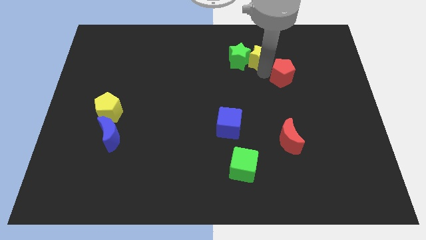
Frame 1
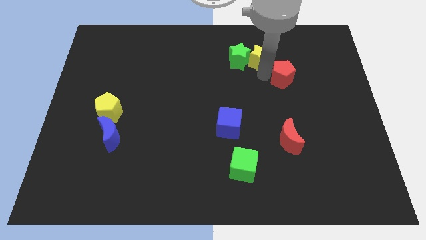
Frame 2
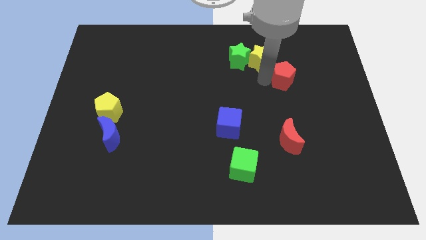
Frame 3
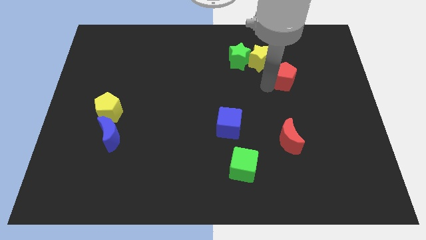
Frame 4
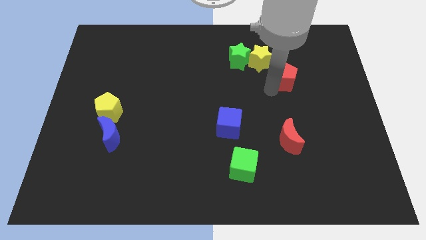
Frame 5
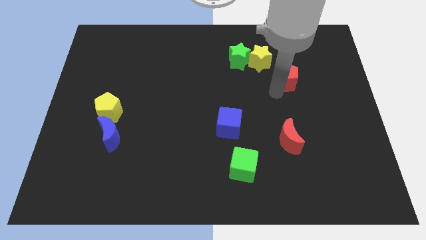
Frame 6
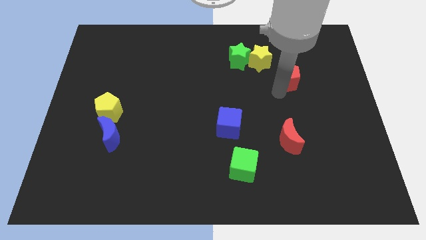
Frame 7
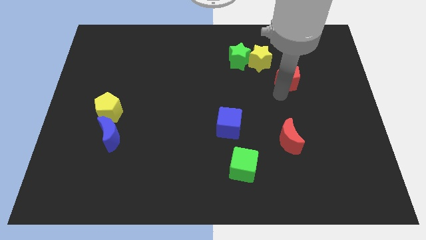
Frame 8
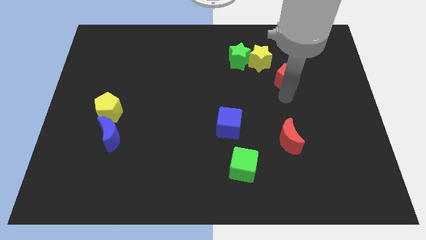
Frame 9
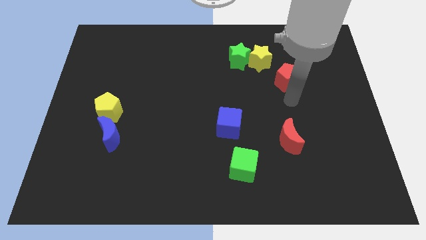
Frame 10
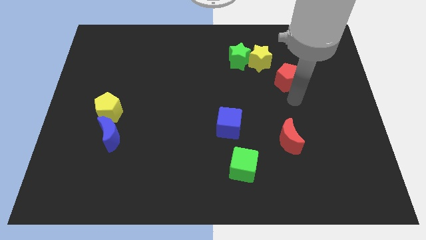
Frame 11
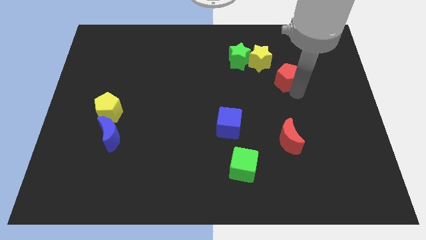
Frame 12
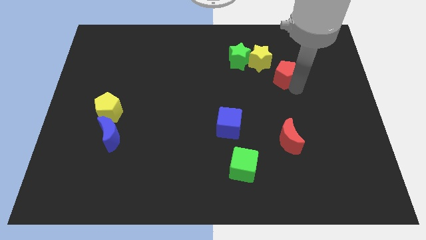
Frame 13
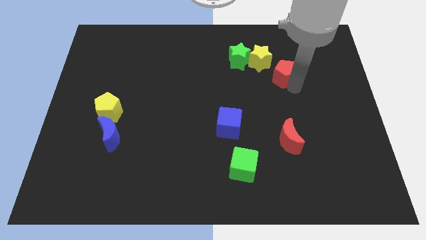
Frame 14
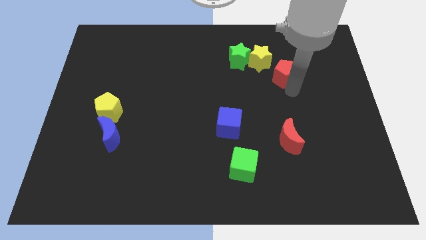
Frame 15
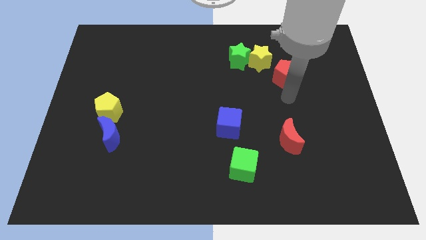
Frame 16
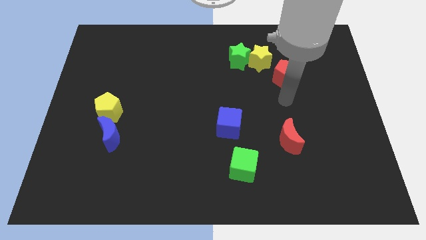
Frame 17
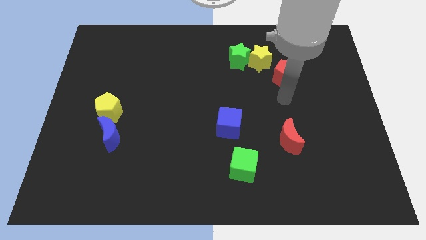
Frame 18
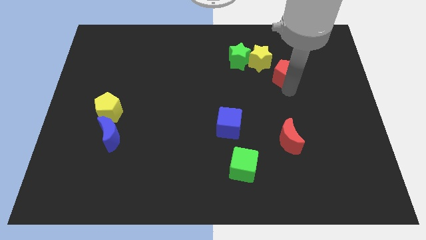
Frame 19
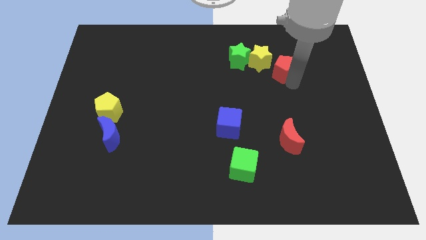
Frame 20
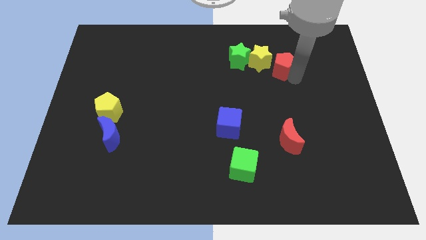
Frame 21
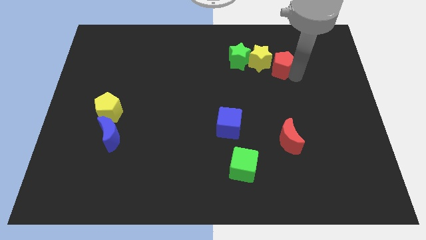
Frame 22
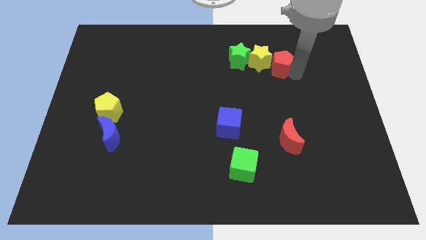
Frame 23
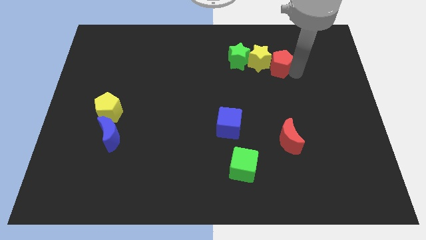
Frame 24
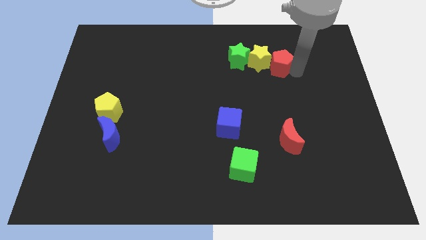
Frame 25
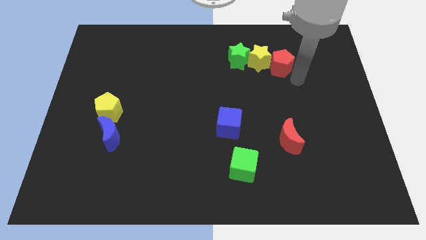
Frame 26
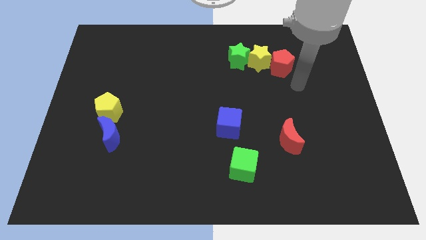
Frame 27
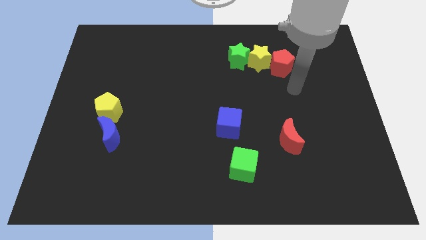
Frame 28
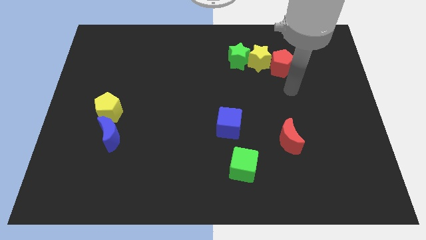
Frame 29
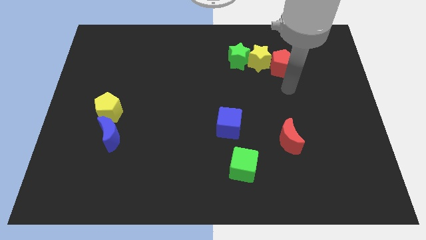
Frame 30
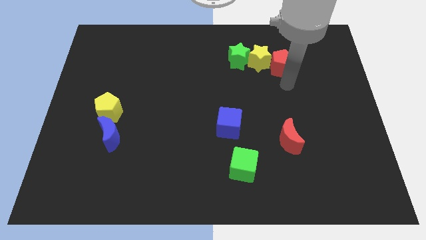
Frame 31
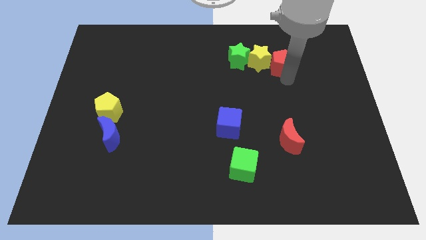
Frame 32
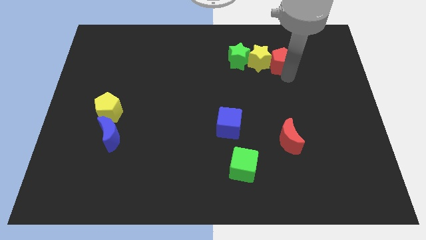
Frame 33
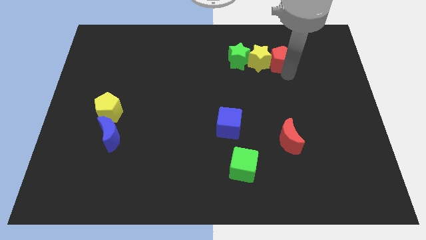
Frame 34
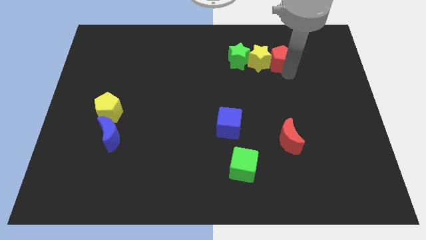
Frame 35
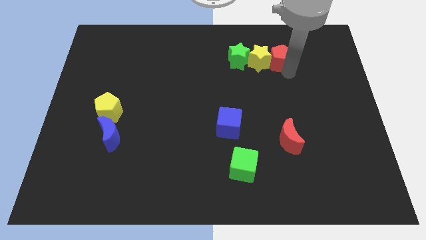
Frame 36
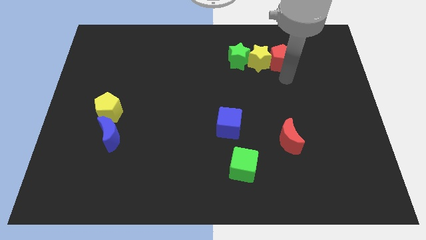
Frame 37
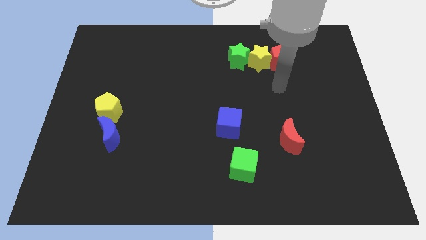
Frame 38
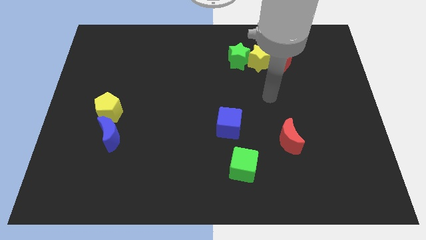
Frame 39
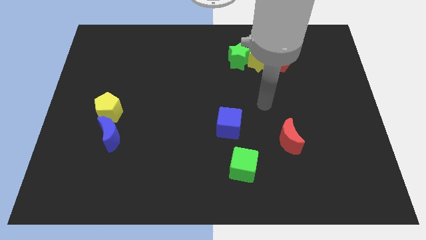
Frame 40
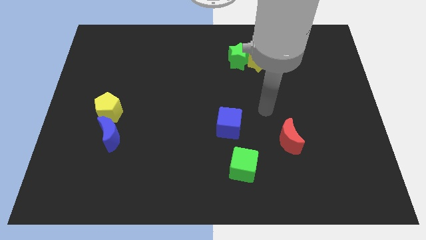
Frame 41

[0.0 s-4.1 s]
move the red pentagon right to the yellow star

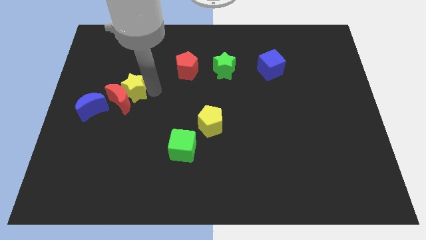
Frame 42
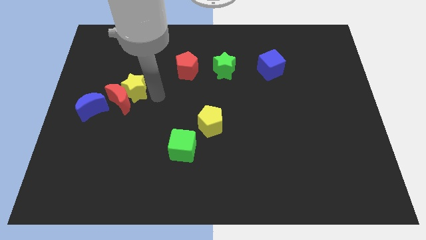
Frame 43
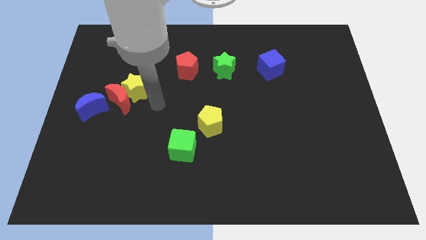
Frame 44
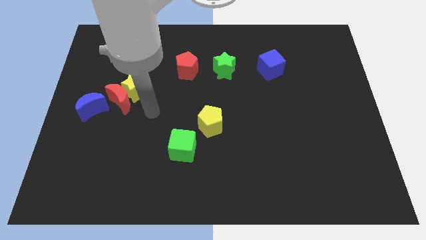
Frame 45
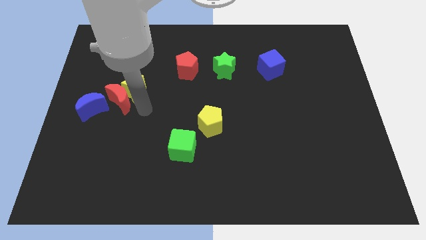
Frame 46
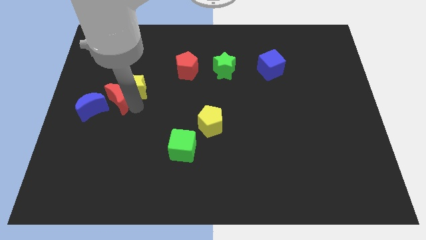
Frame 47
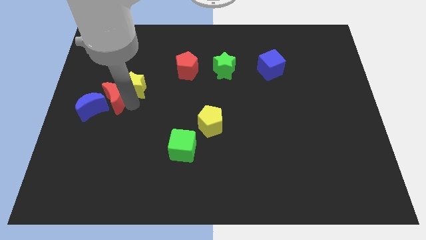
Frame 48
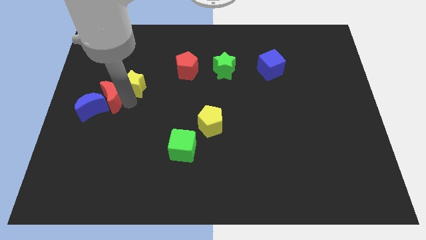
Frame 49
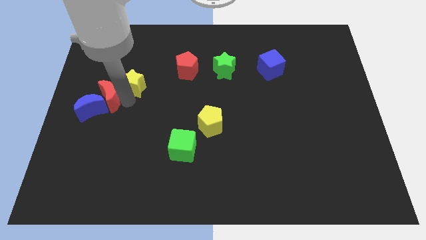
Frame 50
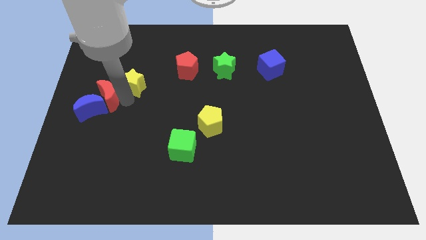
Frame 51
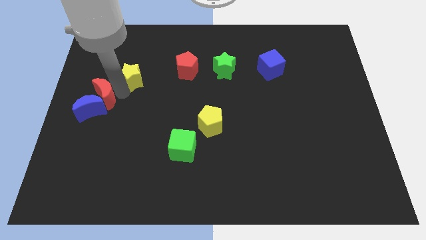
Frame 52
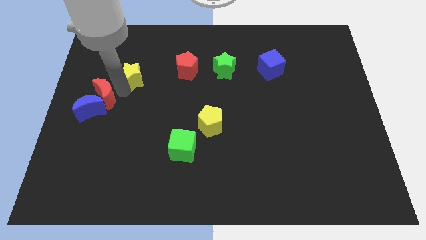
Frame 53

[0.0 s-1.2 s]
move arm between yellow star and red moon

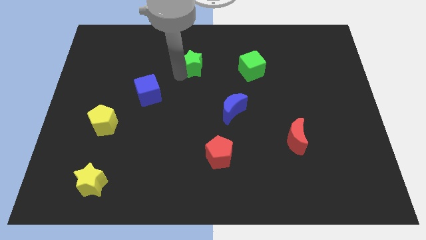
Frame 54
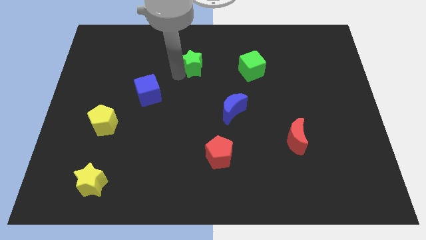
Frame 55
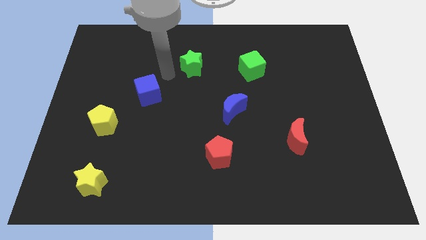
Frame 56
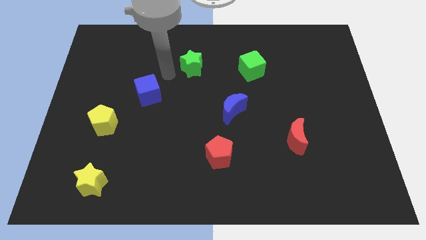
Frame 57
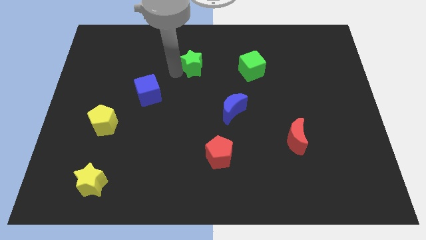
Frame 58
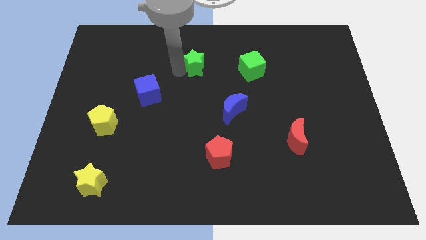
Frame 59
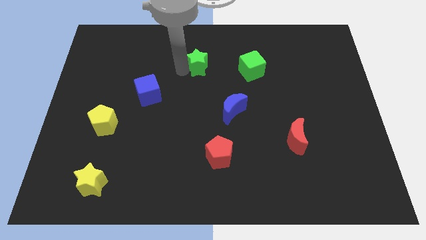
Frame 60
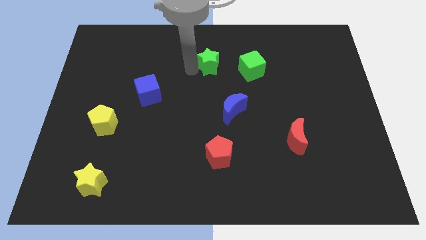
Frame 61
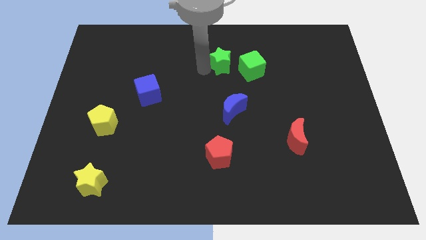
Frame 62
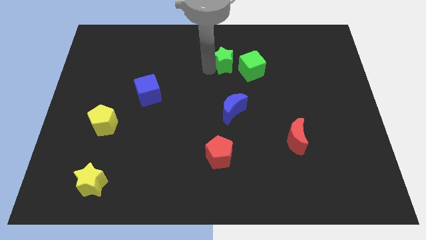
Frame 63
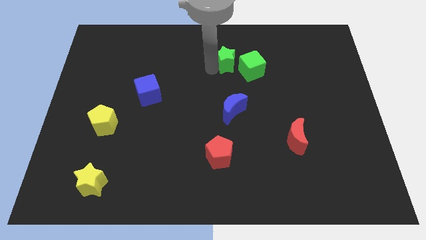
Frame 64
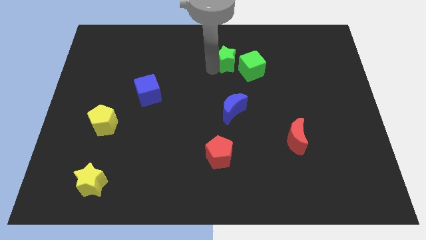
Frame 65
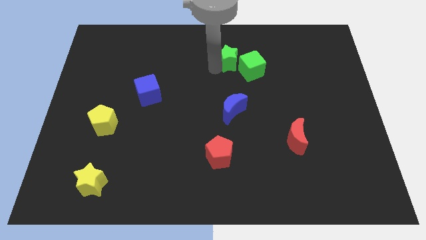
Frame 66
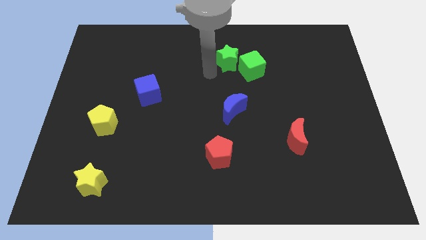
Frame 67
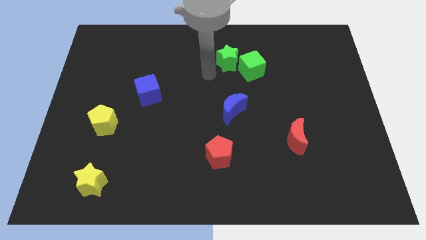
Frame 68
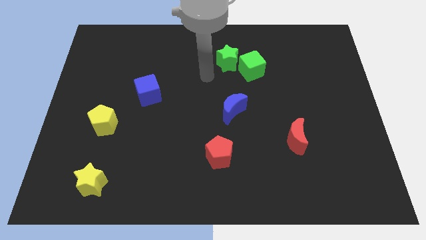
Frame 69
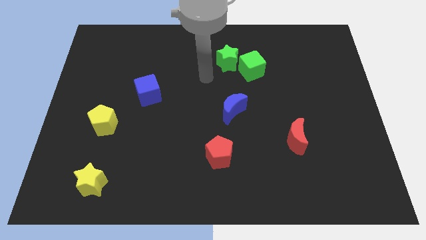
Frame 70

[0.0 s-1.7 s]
place the green star diagonally top left to the green cube

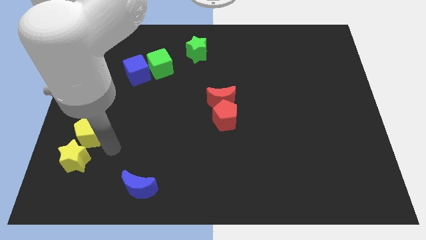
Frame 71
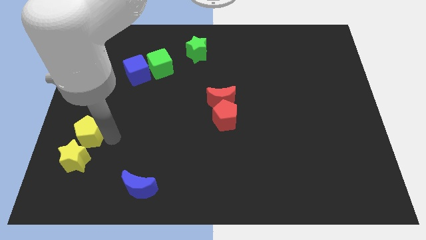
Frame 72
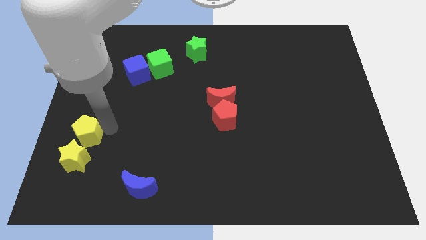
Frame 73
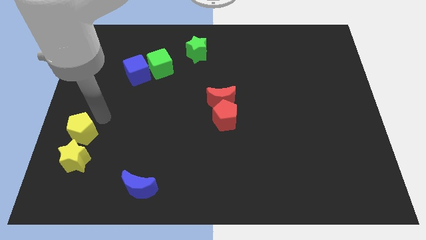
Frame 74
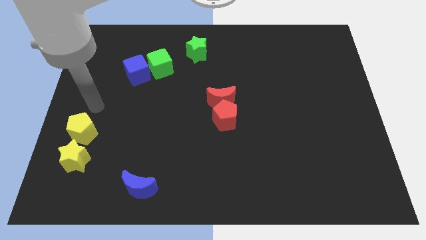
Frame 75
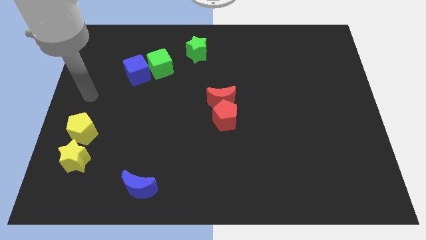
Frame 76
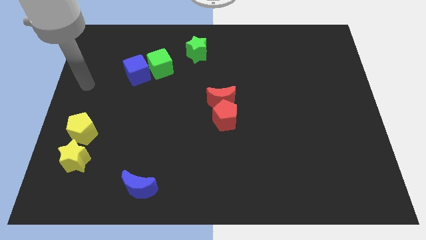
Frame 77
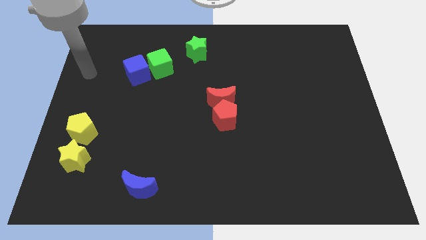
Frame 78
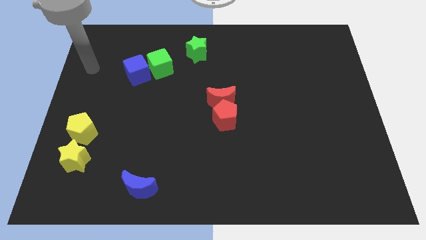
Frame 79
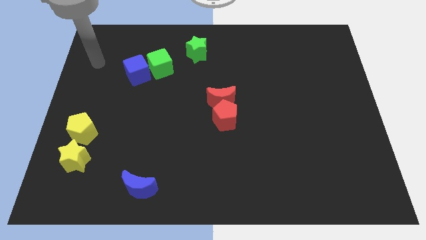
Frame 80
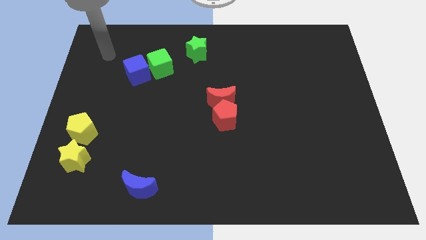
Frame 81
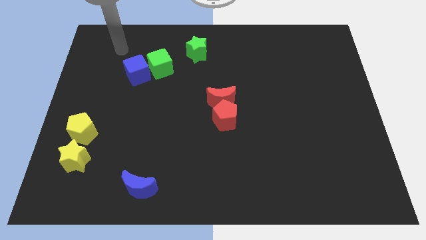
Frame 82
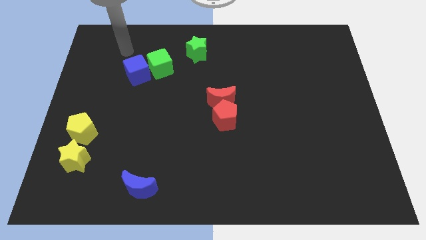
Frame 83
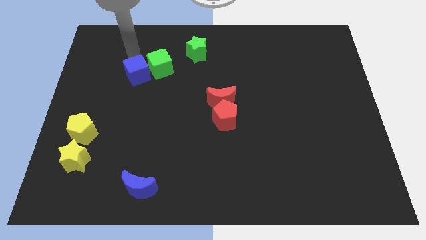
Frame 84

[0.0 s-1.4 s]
move the arm away from the yellow pentagon

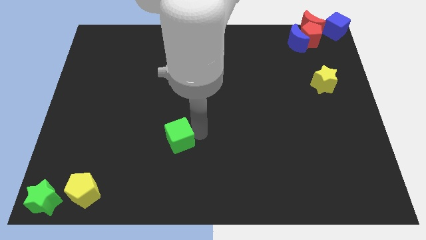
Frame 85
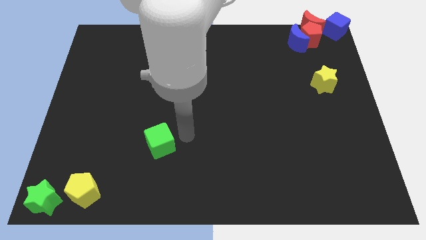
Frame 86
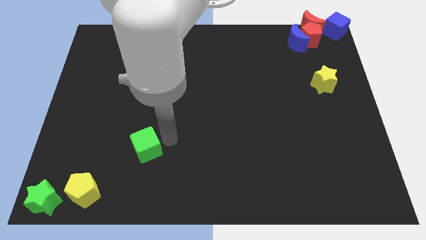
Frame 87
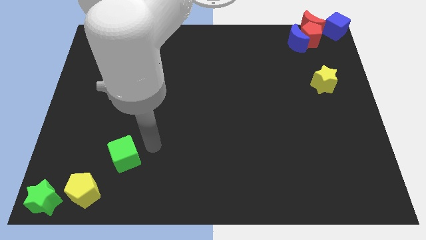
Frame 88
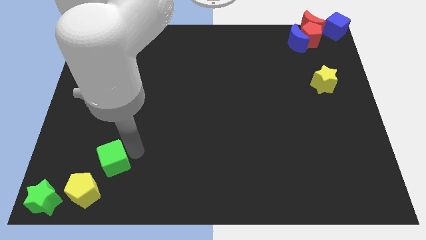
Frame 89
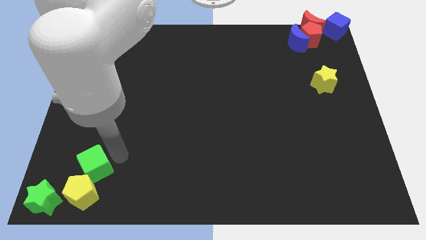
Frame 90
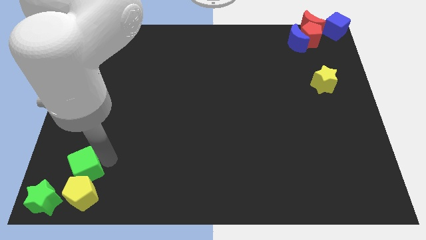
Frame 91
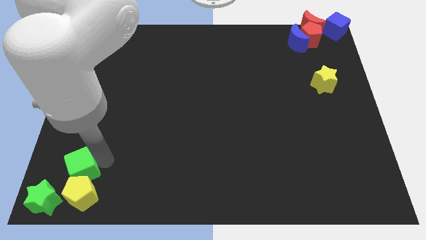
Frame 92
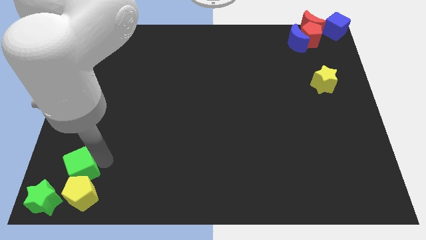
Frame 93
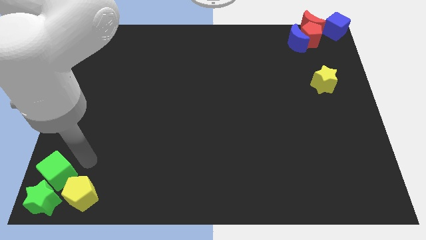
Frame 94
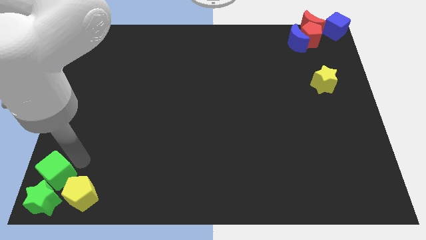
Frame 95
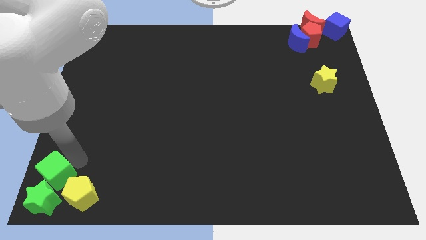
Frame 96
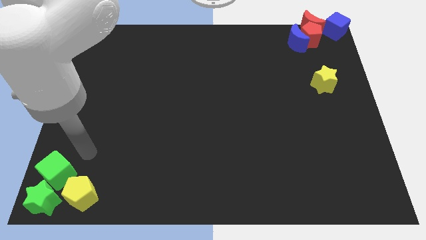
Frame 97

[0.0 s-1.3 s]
move the green cube top of the green star
